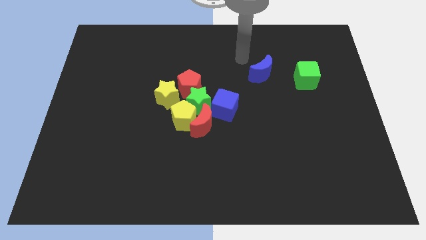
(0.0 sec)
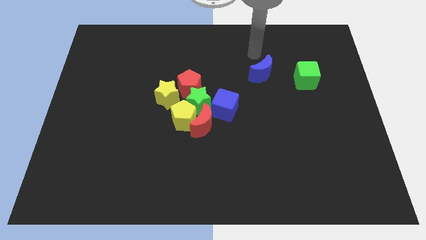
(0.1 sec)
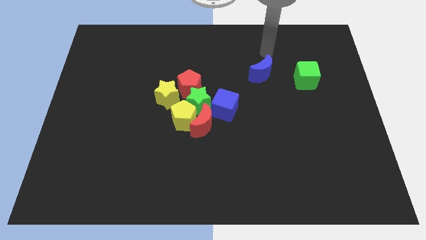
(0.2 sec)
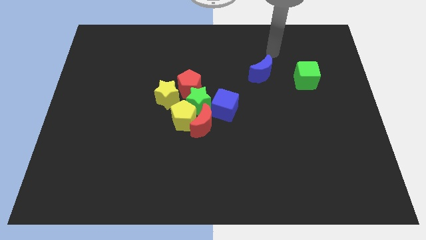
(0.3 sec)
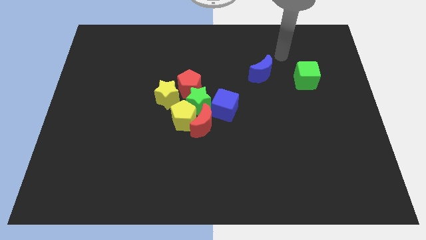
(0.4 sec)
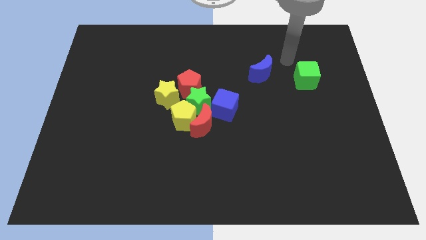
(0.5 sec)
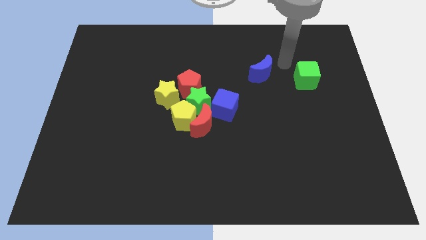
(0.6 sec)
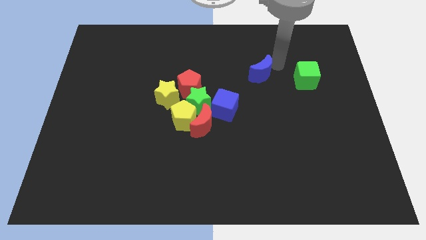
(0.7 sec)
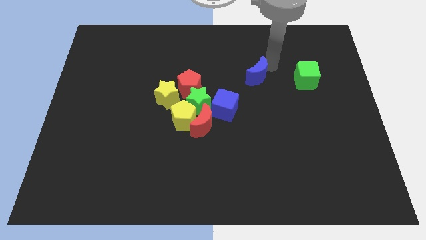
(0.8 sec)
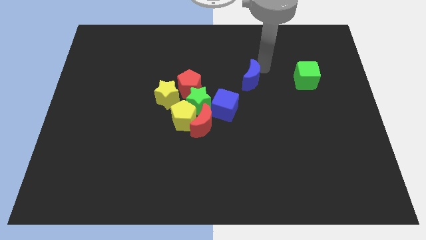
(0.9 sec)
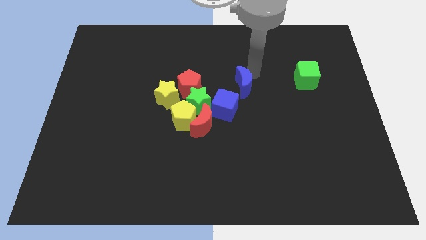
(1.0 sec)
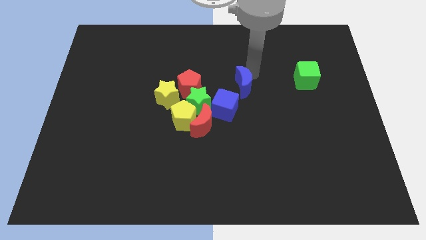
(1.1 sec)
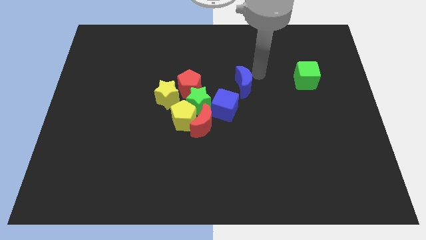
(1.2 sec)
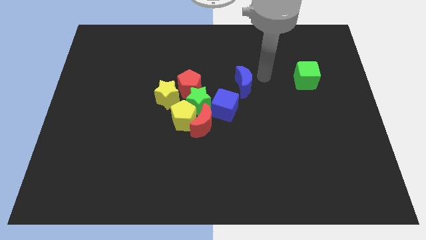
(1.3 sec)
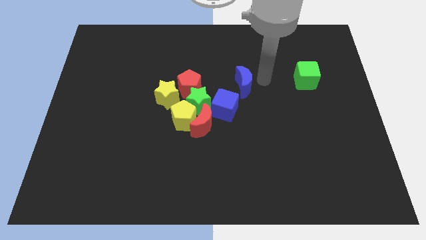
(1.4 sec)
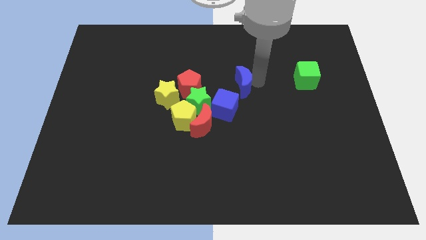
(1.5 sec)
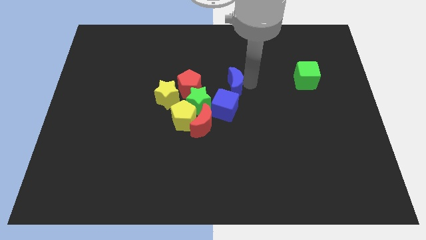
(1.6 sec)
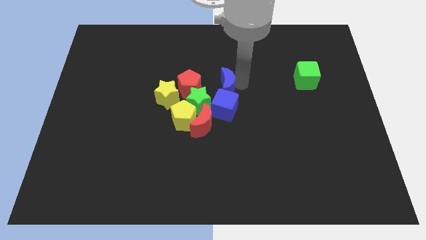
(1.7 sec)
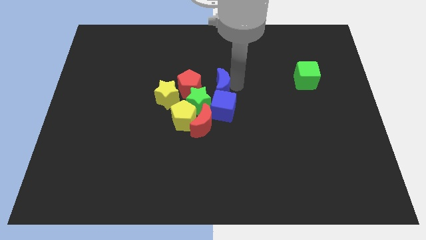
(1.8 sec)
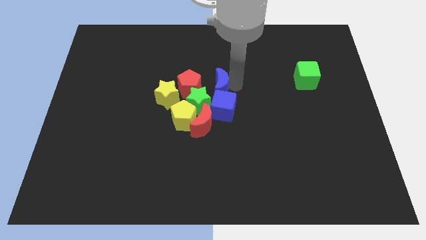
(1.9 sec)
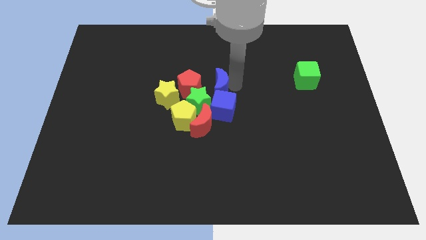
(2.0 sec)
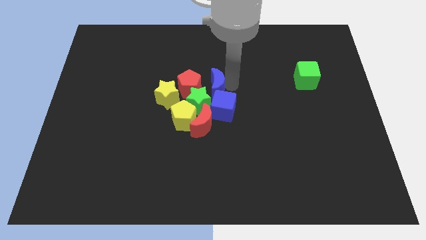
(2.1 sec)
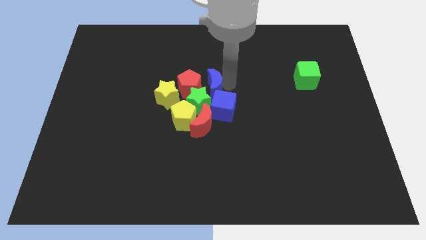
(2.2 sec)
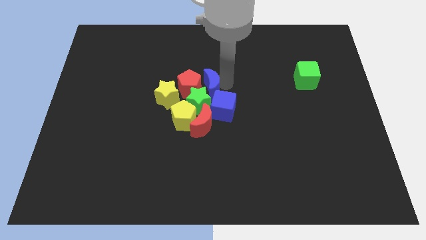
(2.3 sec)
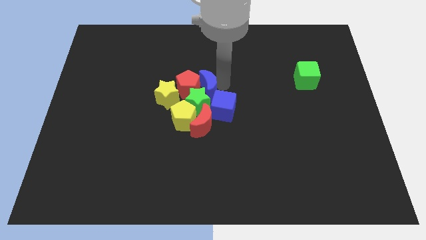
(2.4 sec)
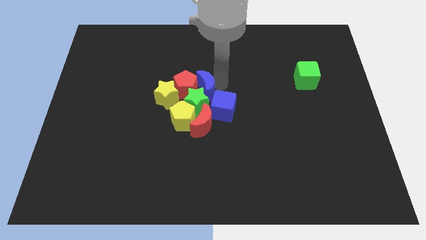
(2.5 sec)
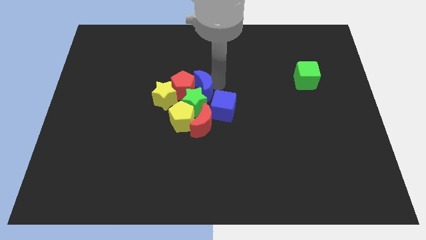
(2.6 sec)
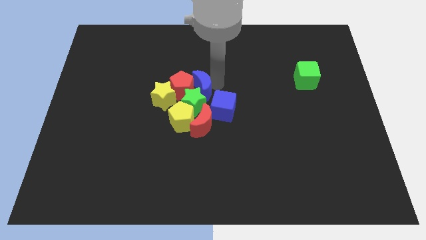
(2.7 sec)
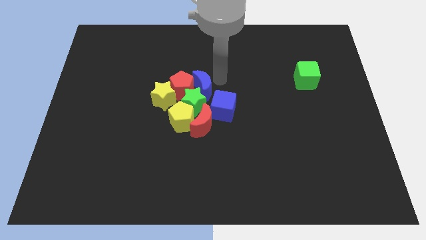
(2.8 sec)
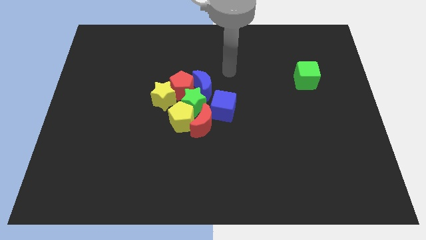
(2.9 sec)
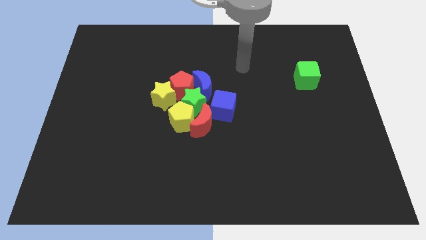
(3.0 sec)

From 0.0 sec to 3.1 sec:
push the blue crescent close to red pentagon

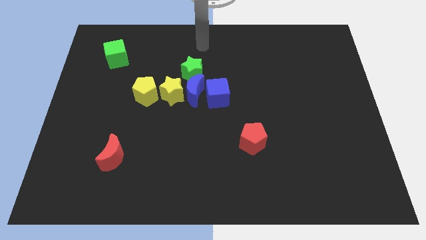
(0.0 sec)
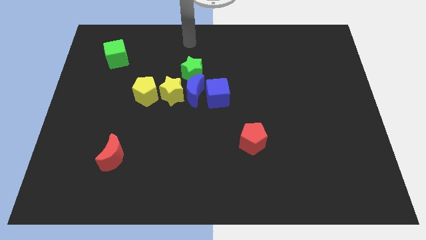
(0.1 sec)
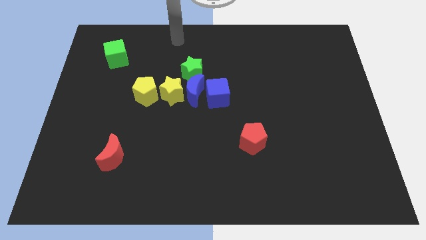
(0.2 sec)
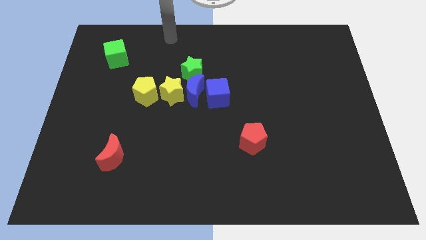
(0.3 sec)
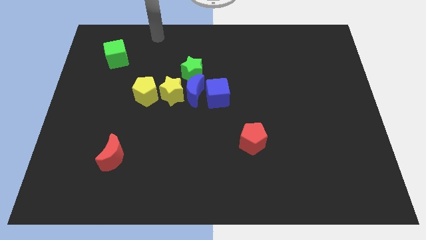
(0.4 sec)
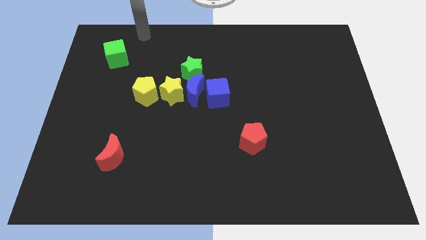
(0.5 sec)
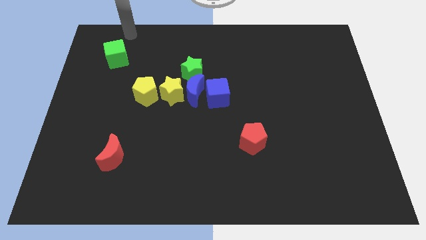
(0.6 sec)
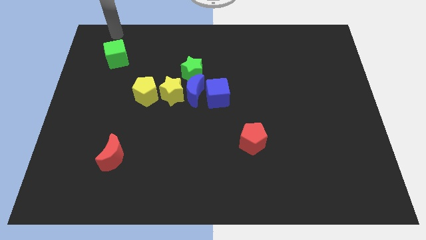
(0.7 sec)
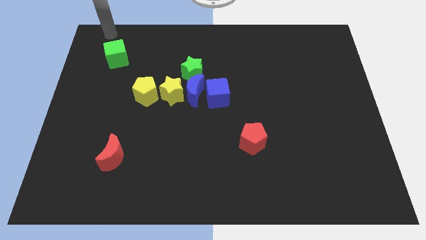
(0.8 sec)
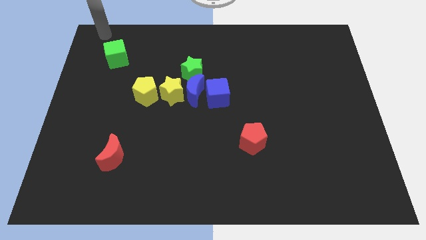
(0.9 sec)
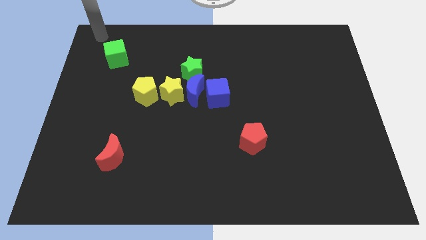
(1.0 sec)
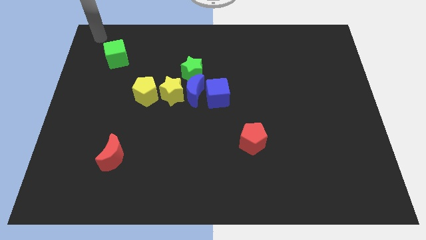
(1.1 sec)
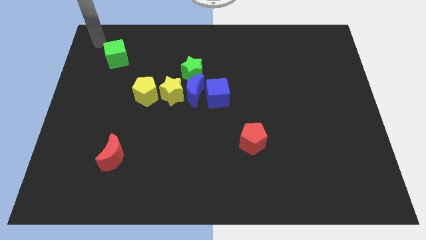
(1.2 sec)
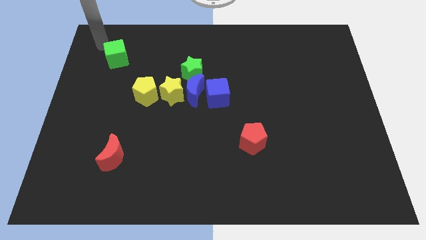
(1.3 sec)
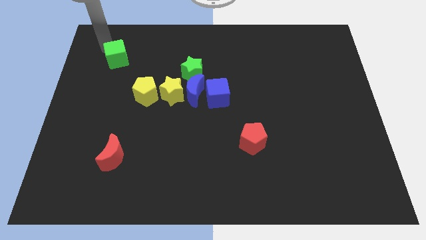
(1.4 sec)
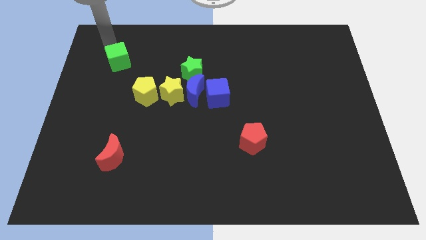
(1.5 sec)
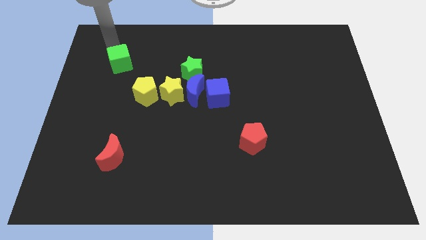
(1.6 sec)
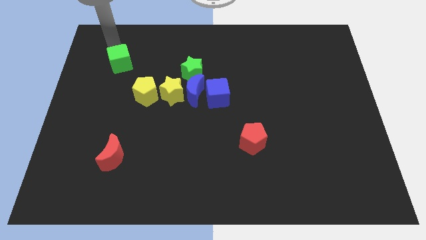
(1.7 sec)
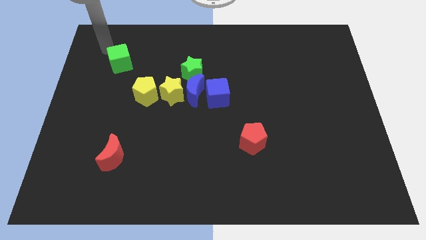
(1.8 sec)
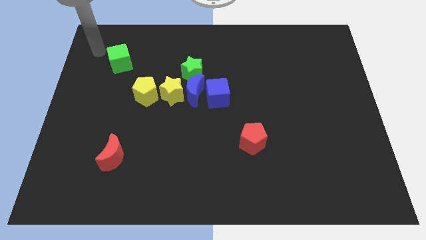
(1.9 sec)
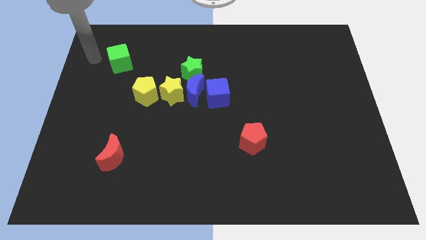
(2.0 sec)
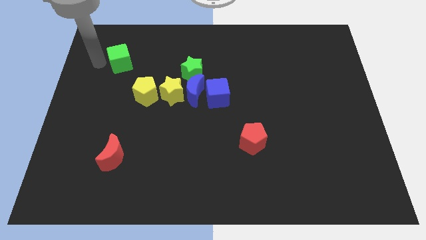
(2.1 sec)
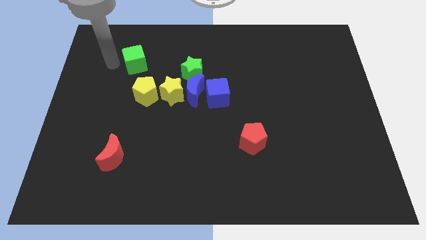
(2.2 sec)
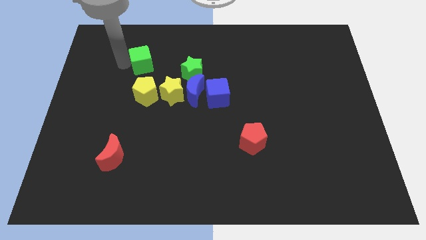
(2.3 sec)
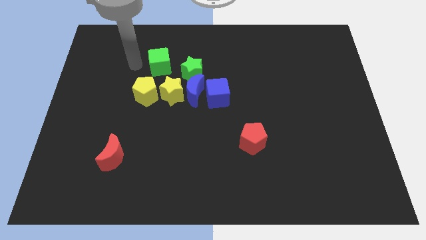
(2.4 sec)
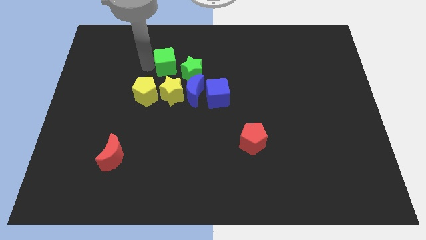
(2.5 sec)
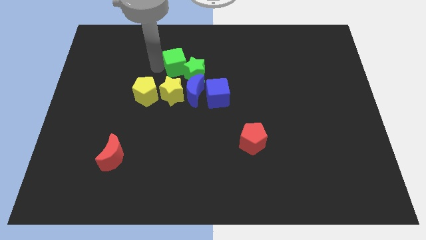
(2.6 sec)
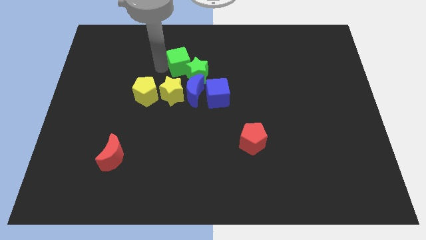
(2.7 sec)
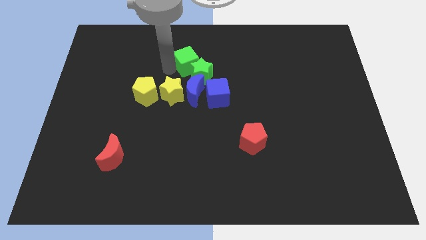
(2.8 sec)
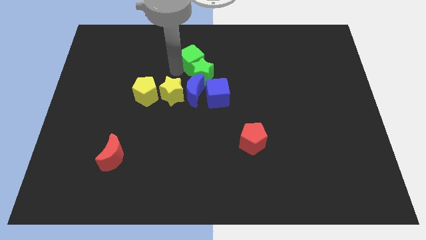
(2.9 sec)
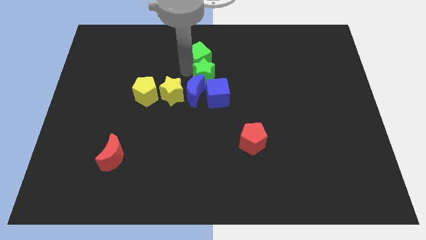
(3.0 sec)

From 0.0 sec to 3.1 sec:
place green cube above green star

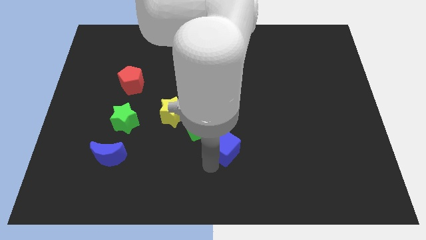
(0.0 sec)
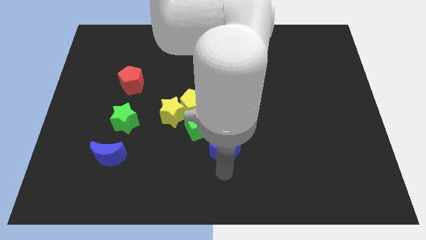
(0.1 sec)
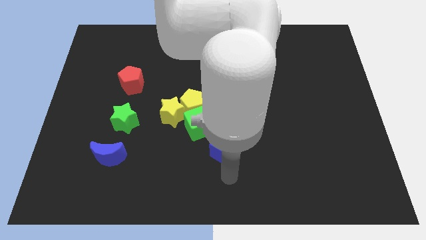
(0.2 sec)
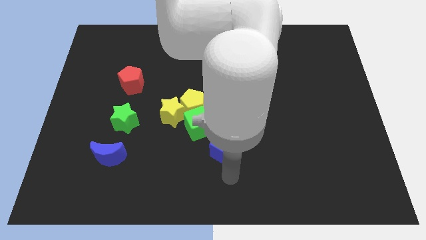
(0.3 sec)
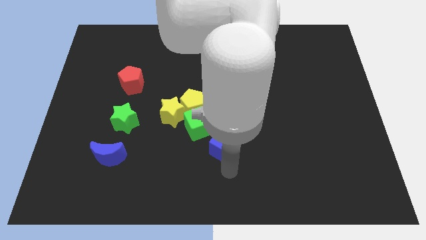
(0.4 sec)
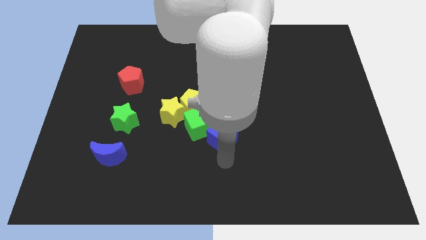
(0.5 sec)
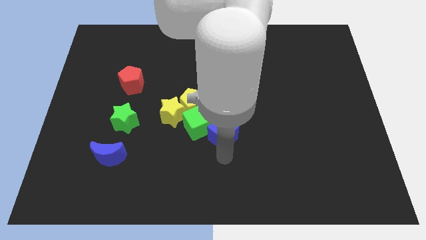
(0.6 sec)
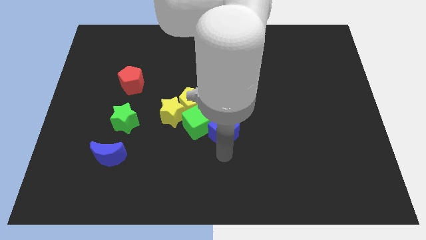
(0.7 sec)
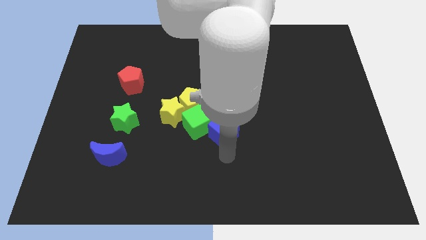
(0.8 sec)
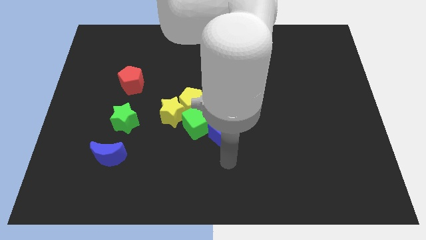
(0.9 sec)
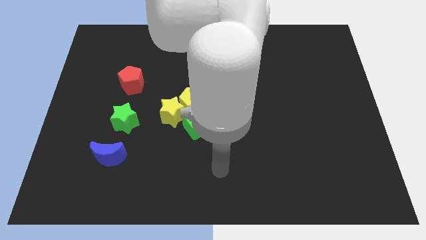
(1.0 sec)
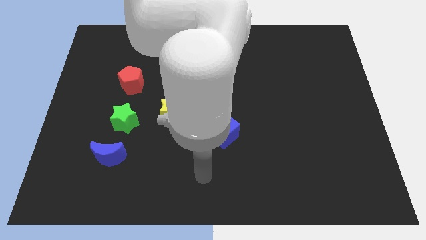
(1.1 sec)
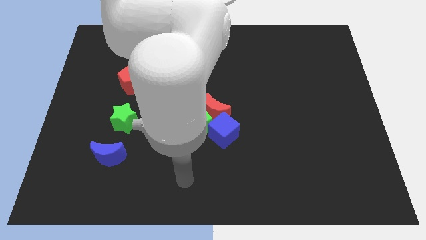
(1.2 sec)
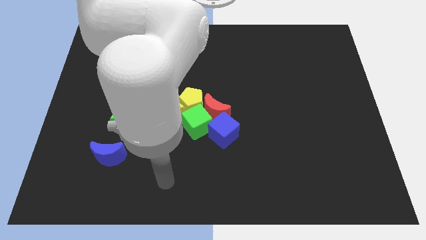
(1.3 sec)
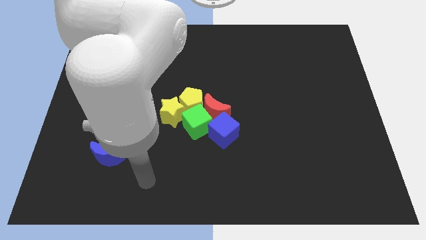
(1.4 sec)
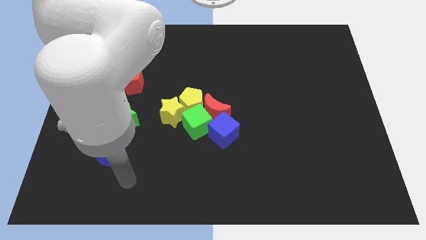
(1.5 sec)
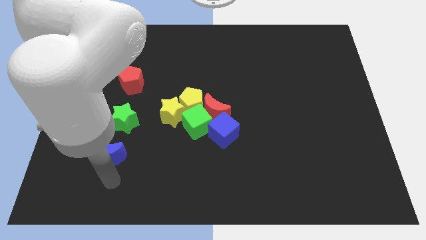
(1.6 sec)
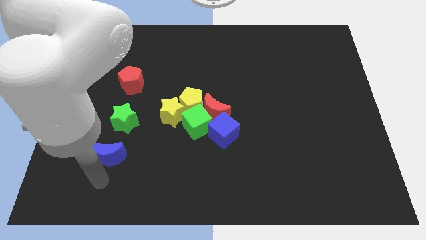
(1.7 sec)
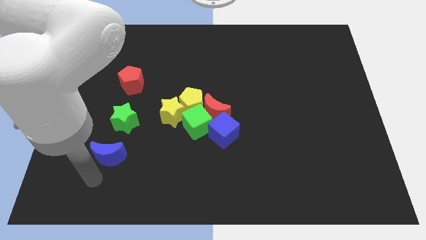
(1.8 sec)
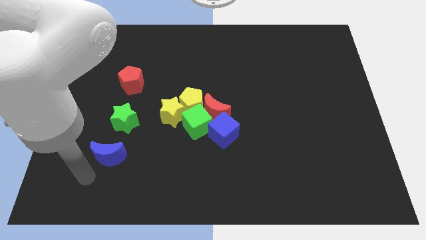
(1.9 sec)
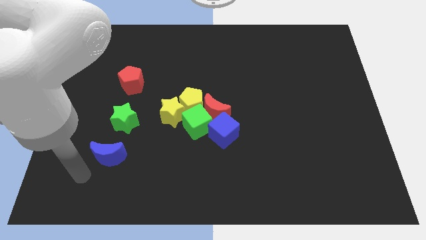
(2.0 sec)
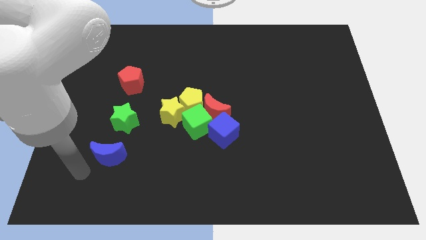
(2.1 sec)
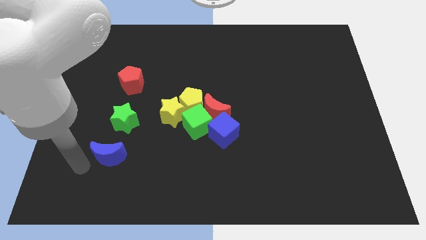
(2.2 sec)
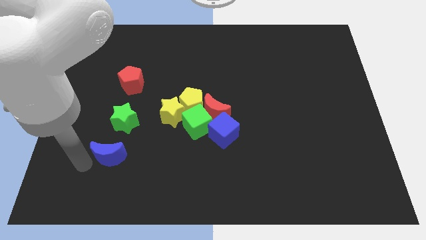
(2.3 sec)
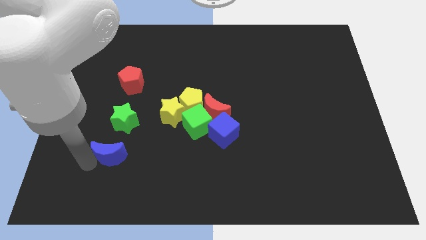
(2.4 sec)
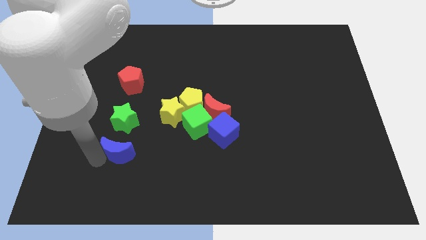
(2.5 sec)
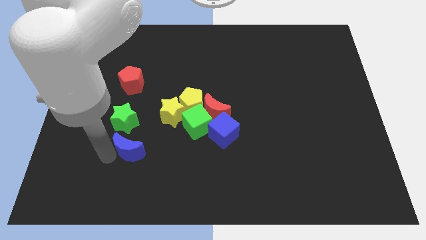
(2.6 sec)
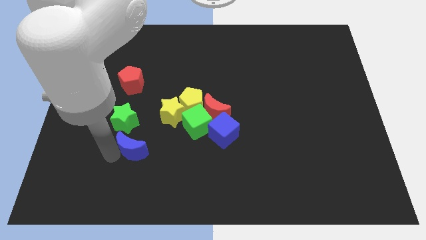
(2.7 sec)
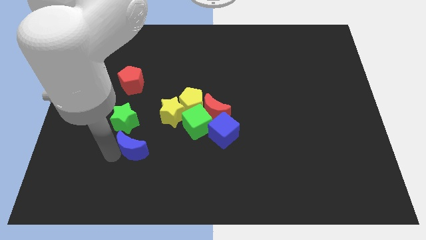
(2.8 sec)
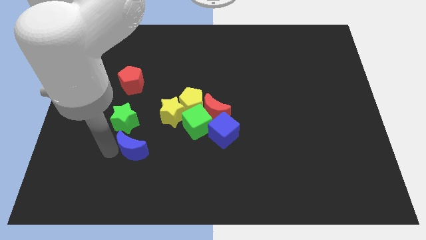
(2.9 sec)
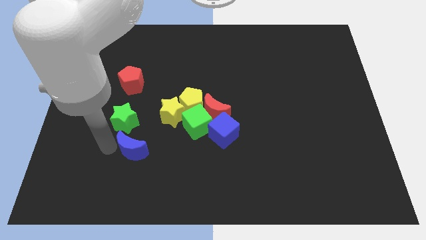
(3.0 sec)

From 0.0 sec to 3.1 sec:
move blue crescent towards the bottom of the green star
